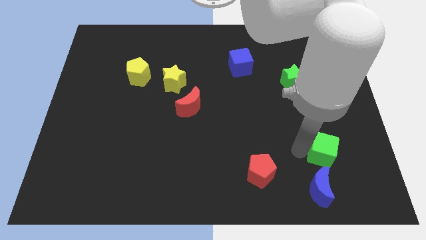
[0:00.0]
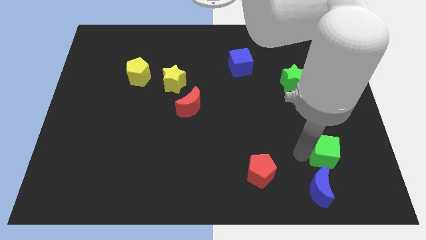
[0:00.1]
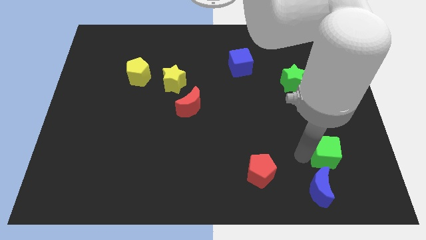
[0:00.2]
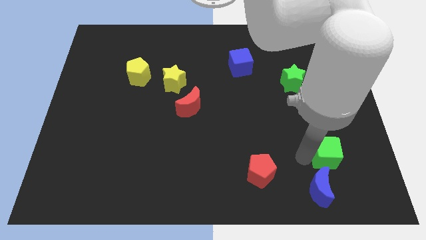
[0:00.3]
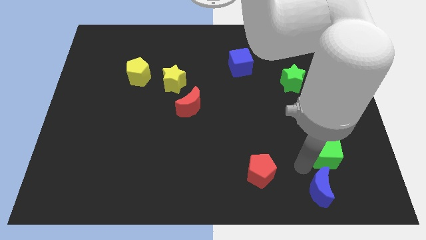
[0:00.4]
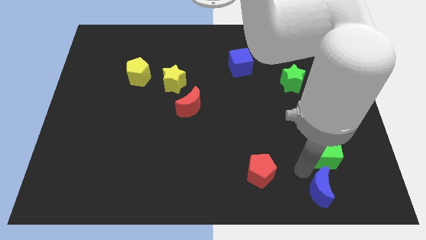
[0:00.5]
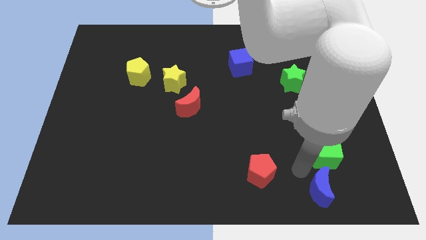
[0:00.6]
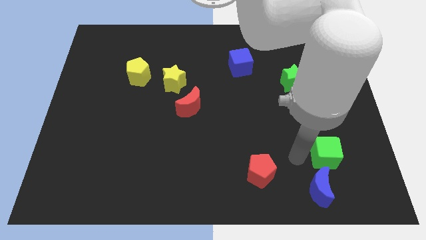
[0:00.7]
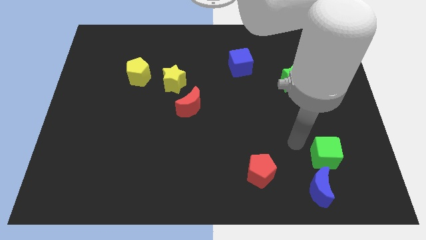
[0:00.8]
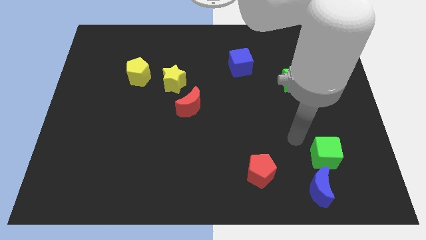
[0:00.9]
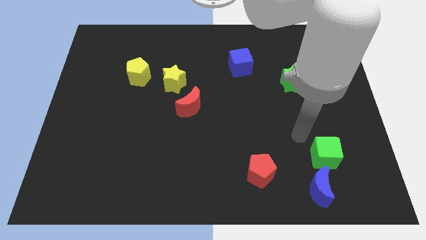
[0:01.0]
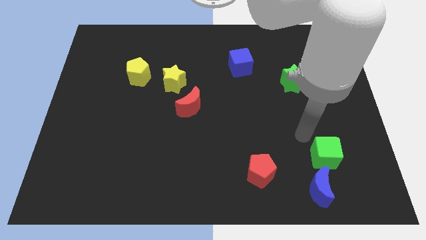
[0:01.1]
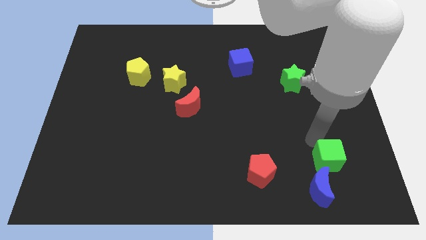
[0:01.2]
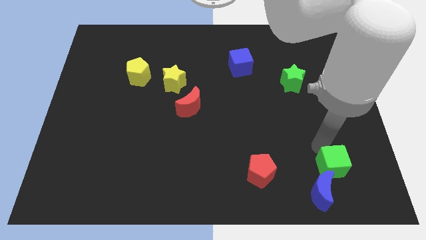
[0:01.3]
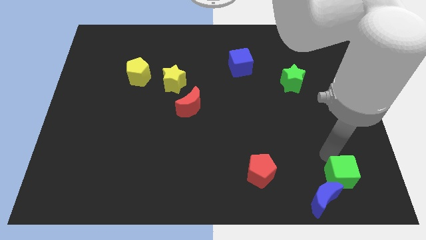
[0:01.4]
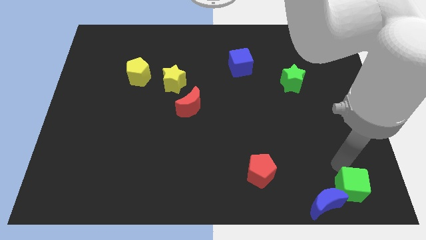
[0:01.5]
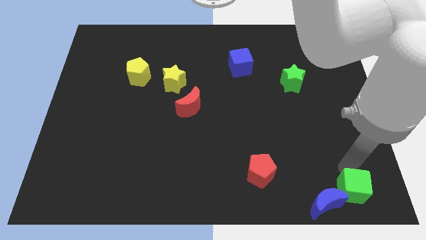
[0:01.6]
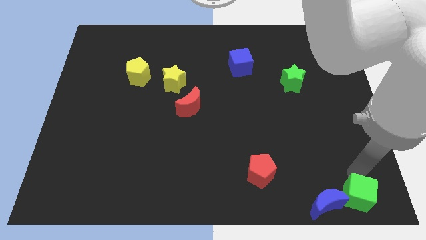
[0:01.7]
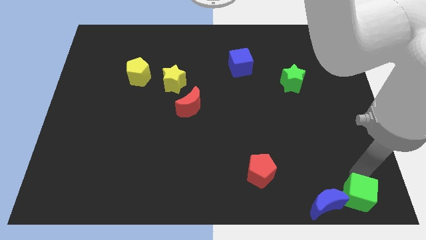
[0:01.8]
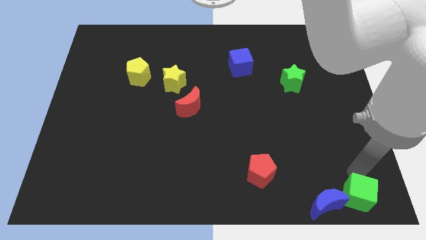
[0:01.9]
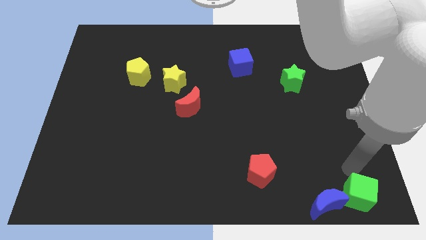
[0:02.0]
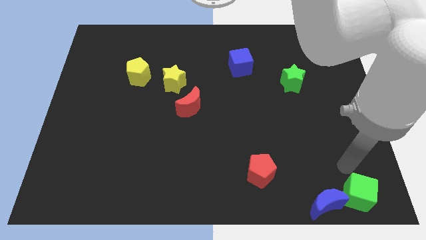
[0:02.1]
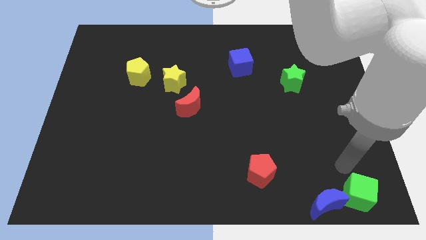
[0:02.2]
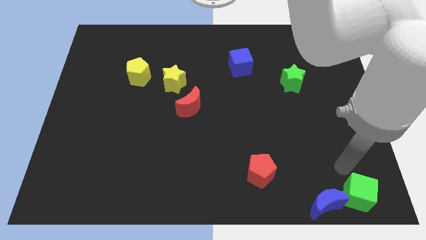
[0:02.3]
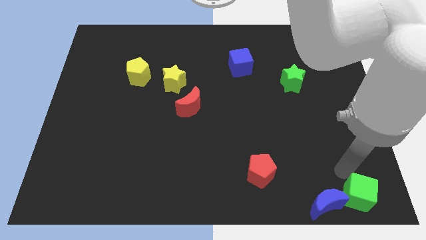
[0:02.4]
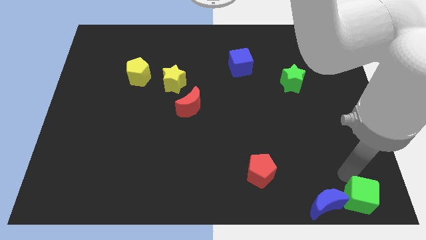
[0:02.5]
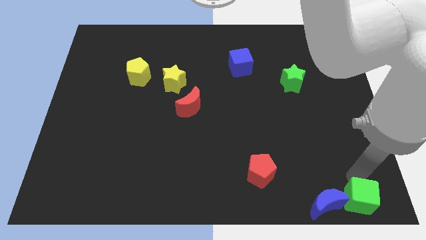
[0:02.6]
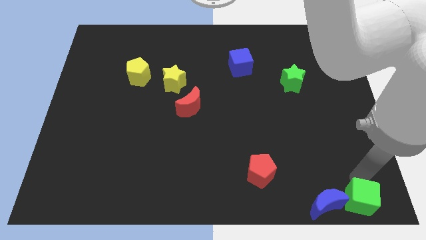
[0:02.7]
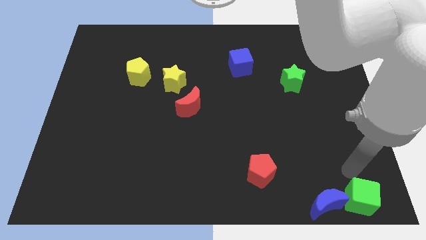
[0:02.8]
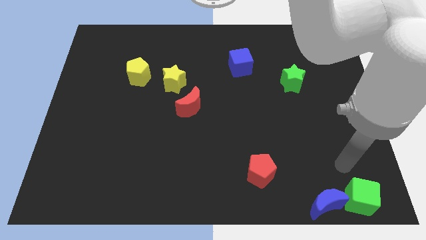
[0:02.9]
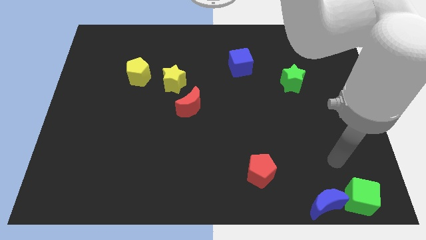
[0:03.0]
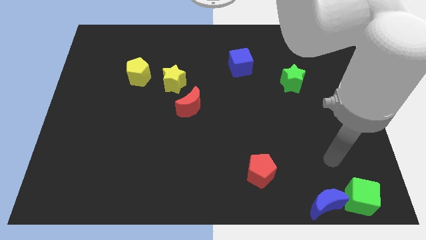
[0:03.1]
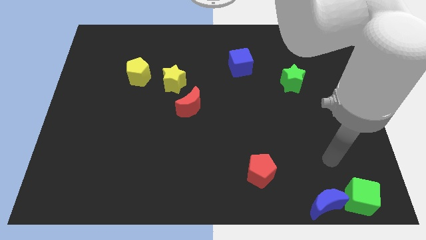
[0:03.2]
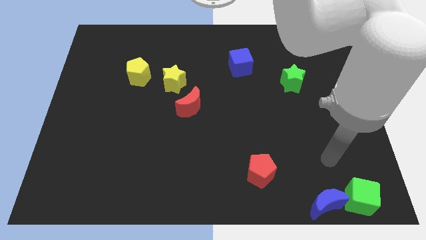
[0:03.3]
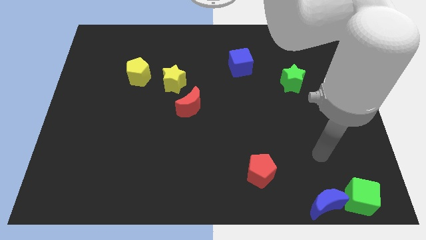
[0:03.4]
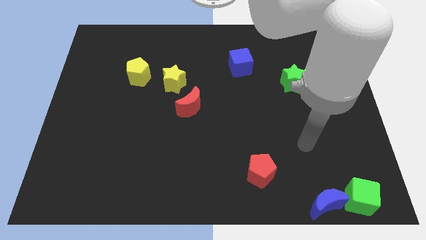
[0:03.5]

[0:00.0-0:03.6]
place the green cube to the right side of the blue crescent

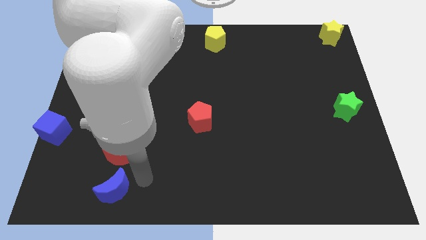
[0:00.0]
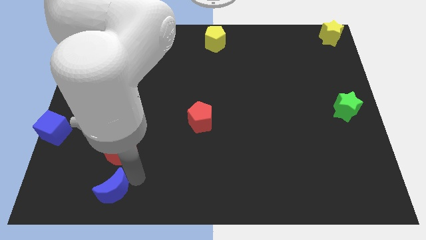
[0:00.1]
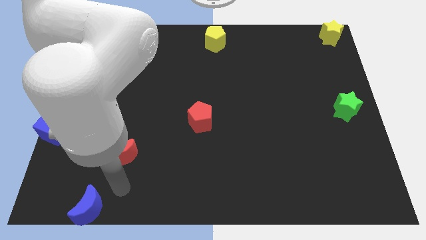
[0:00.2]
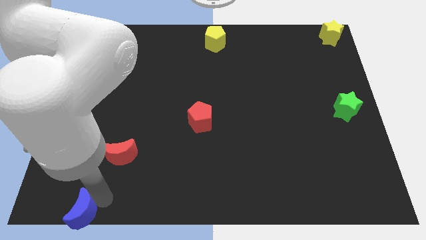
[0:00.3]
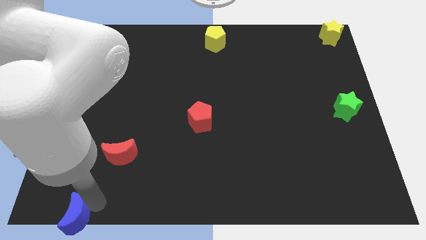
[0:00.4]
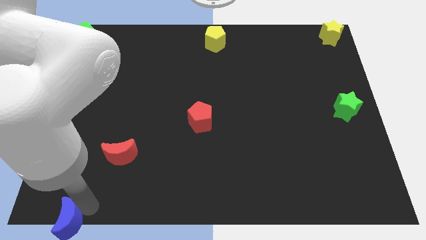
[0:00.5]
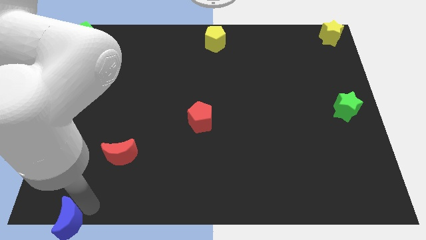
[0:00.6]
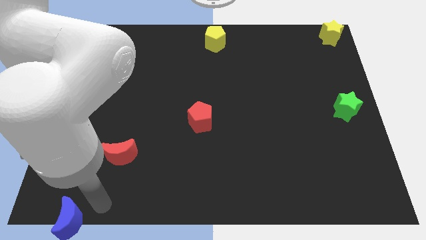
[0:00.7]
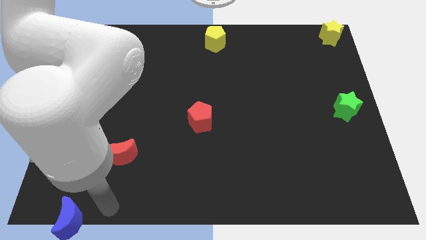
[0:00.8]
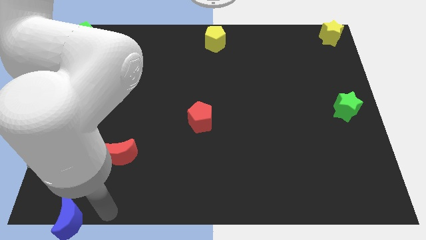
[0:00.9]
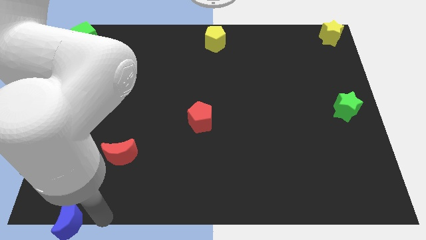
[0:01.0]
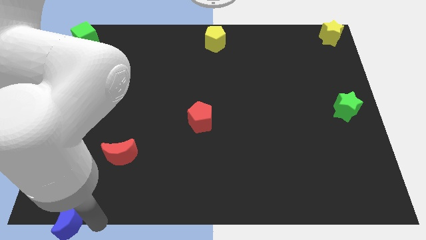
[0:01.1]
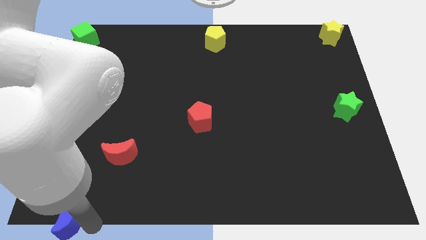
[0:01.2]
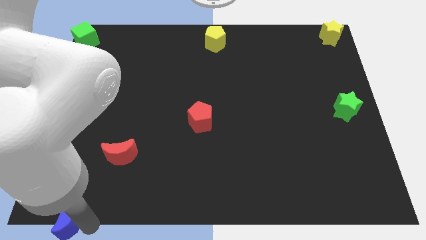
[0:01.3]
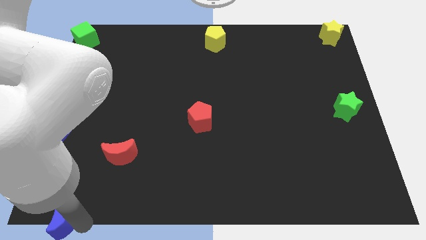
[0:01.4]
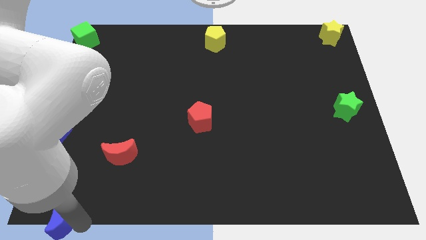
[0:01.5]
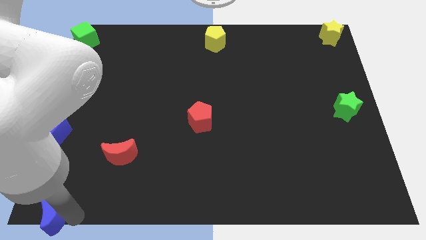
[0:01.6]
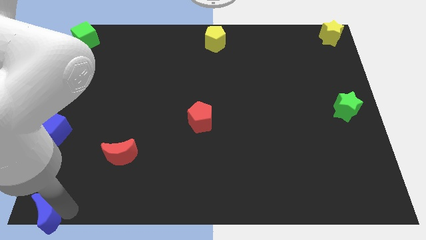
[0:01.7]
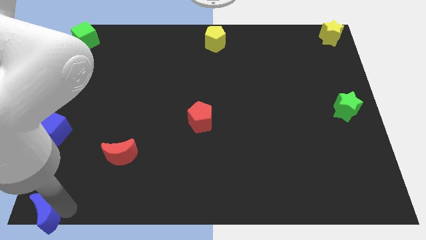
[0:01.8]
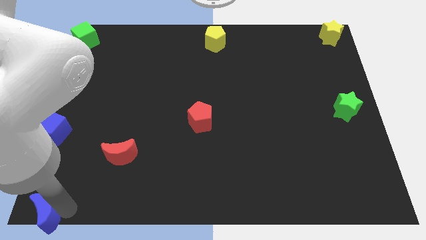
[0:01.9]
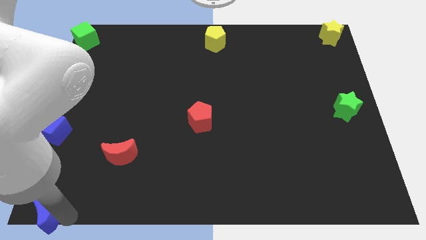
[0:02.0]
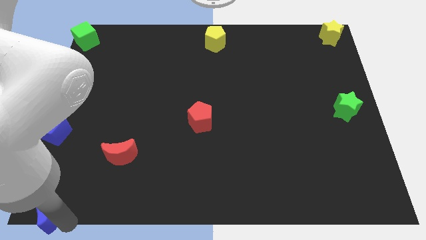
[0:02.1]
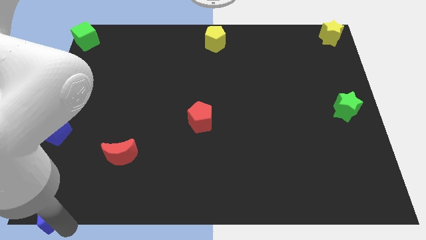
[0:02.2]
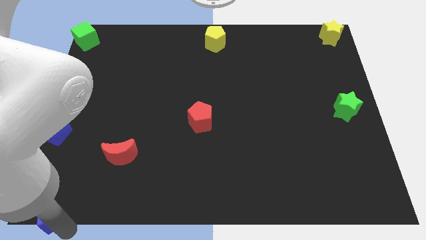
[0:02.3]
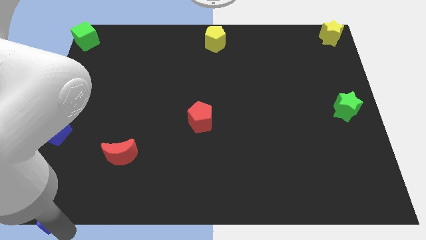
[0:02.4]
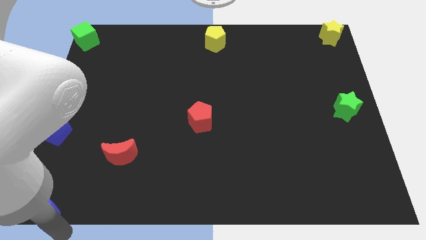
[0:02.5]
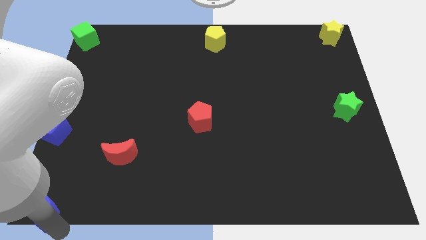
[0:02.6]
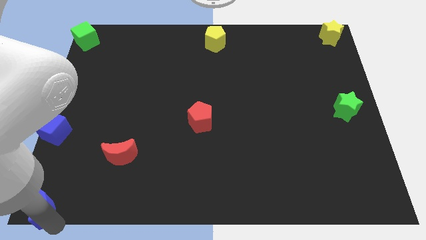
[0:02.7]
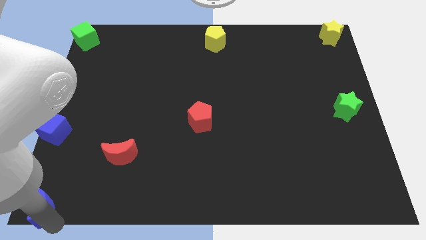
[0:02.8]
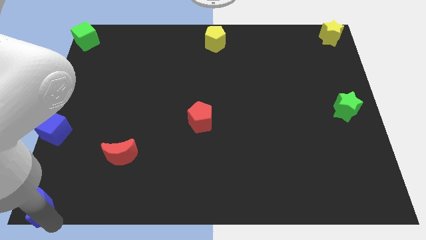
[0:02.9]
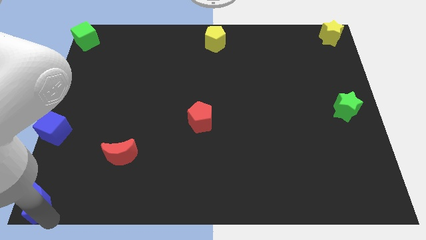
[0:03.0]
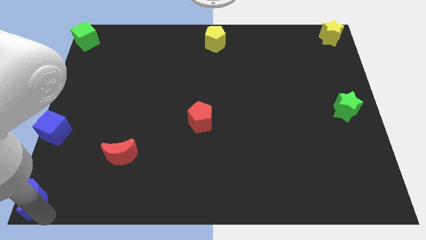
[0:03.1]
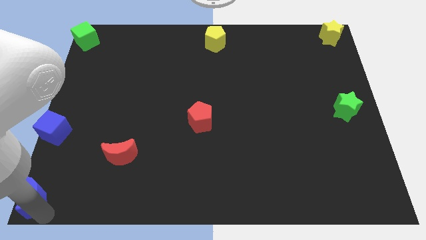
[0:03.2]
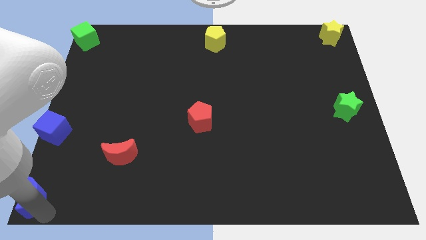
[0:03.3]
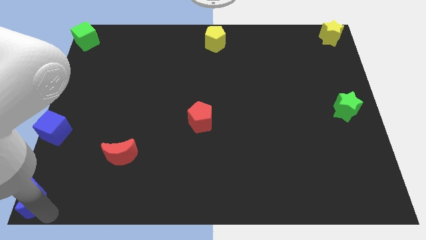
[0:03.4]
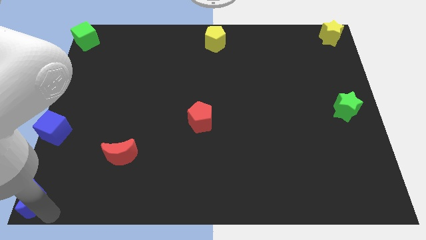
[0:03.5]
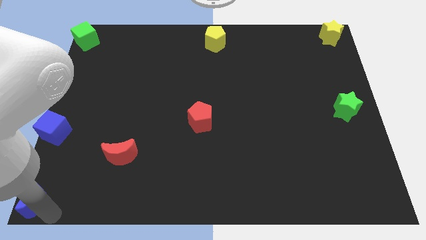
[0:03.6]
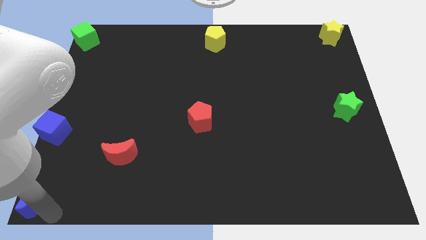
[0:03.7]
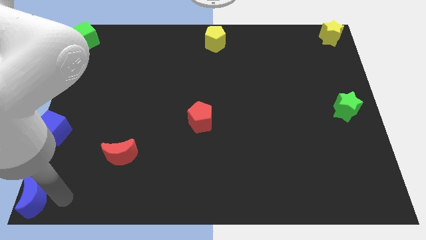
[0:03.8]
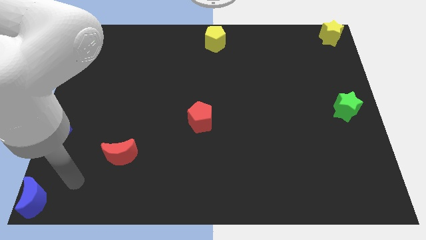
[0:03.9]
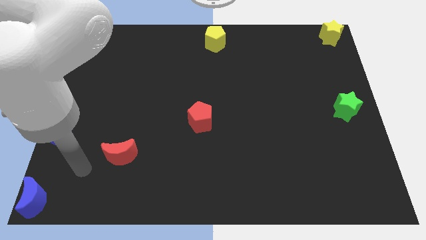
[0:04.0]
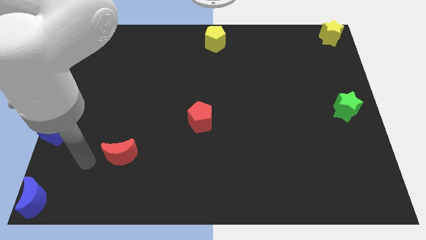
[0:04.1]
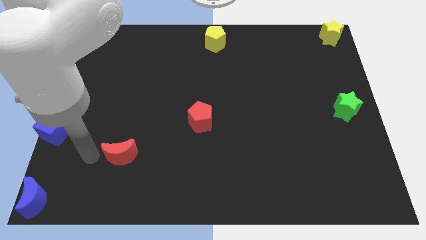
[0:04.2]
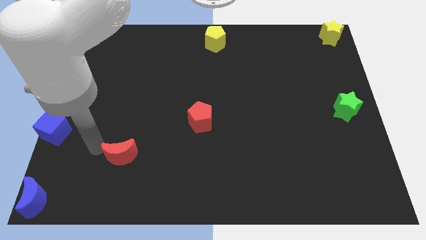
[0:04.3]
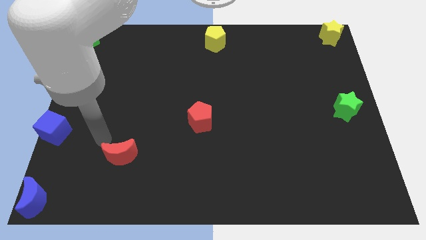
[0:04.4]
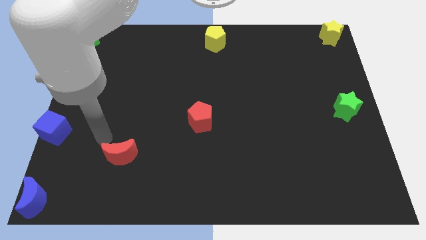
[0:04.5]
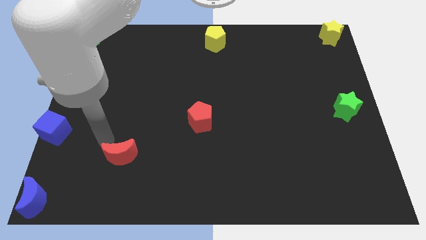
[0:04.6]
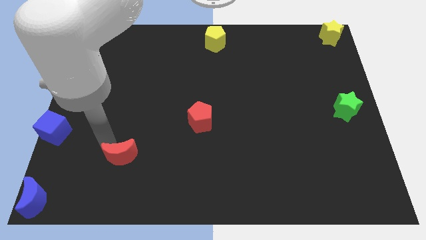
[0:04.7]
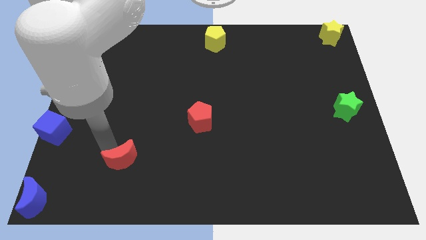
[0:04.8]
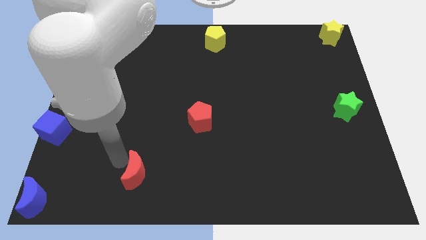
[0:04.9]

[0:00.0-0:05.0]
slide the blue semi circle to the bottom left corner of the board

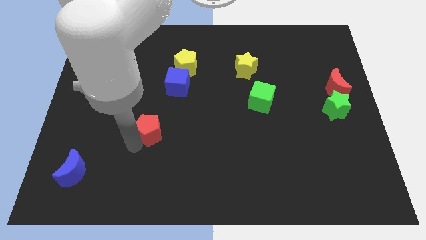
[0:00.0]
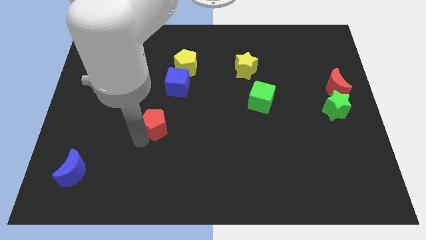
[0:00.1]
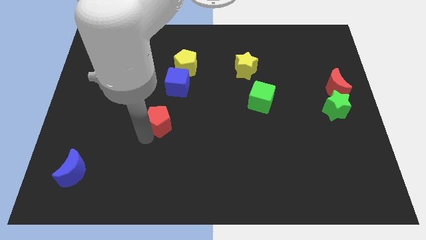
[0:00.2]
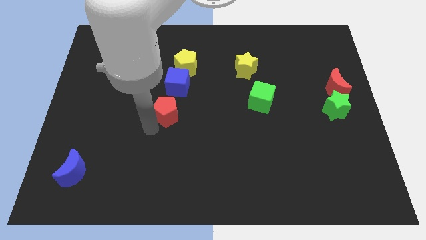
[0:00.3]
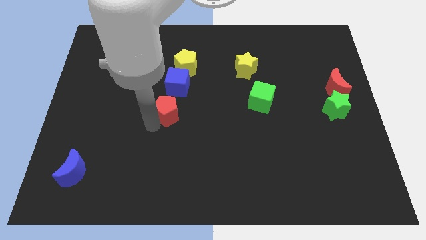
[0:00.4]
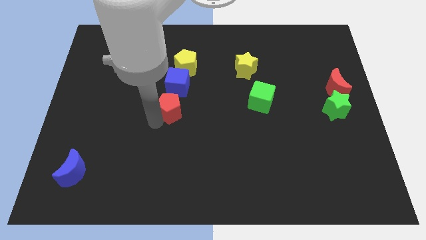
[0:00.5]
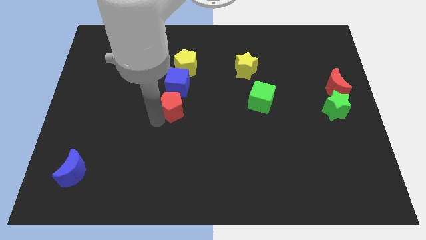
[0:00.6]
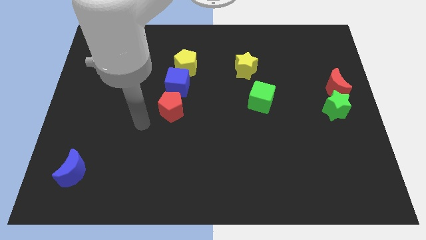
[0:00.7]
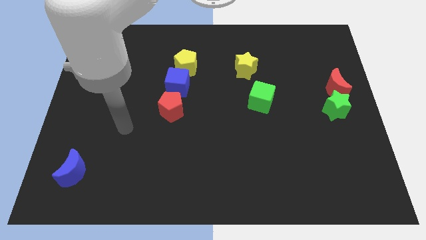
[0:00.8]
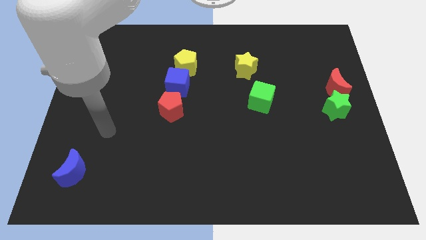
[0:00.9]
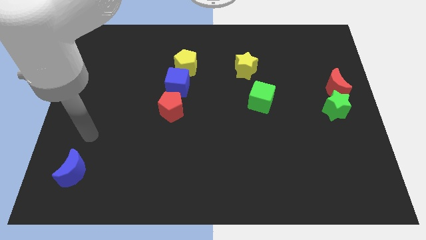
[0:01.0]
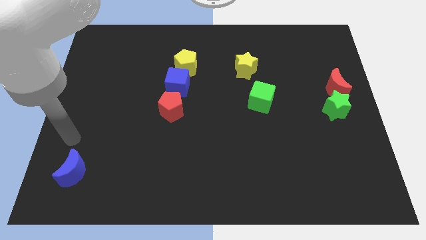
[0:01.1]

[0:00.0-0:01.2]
place the red pentagon below the blue cube
